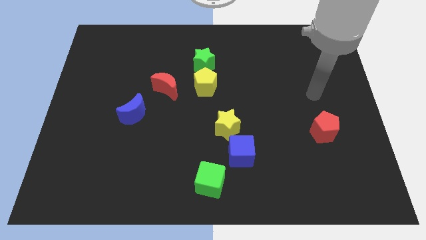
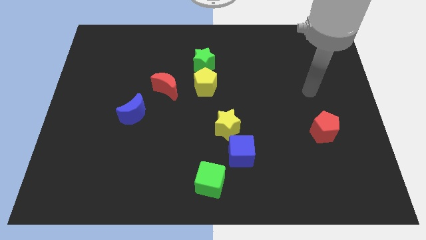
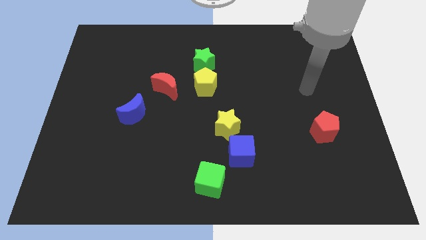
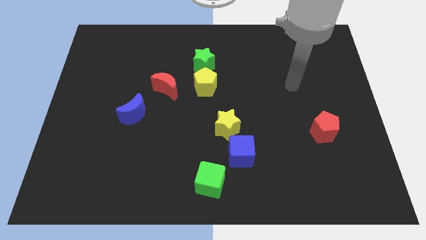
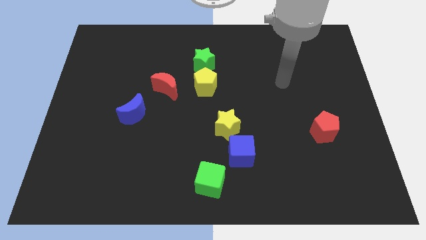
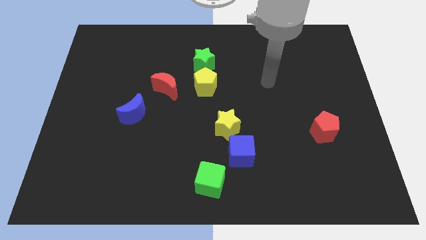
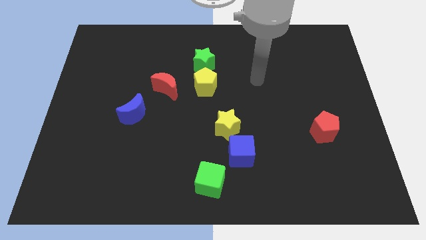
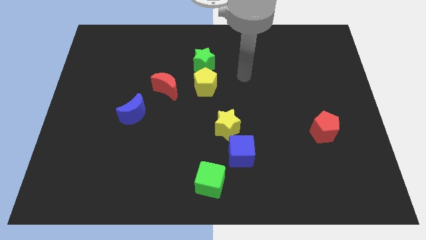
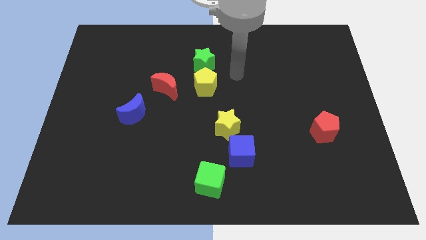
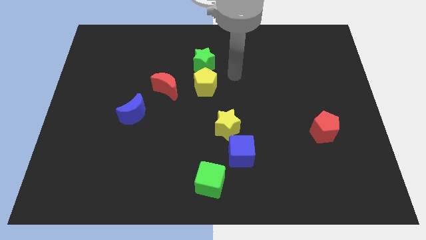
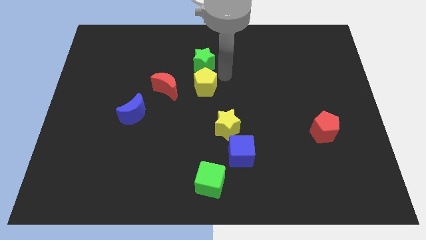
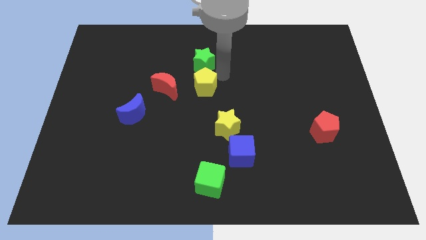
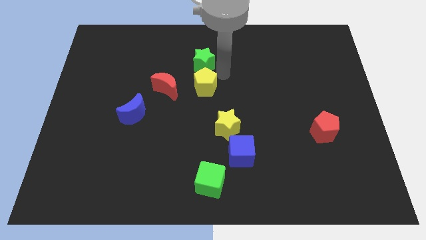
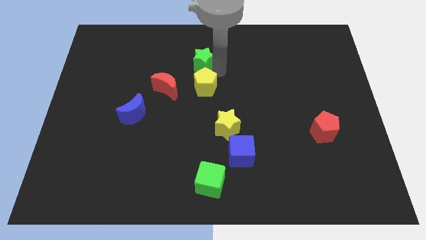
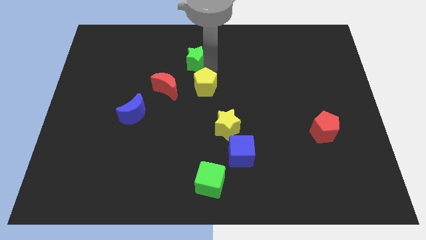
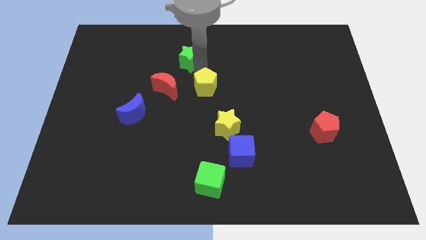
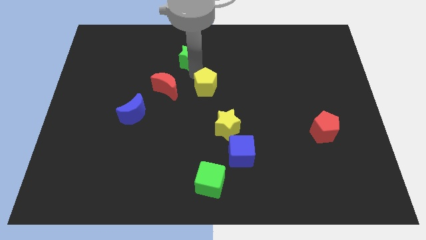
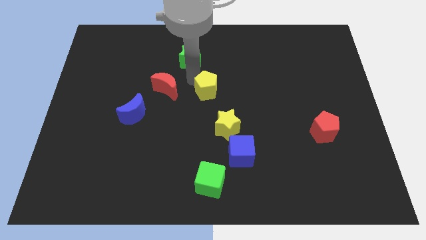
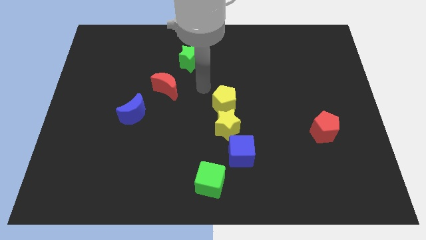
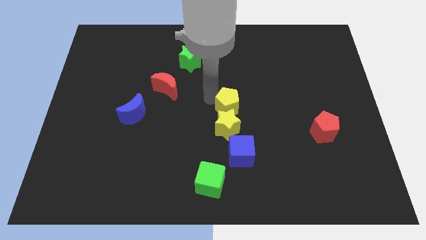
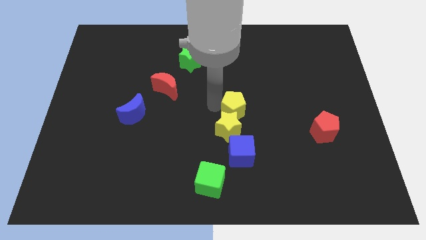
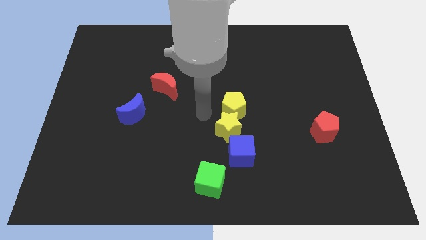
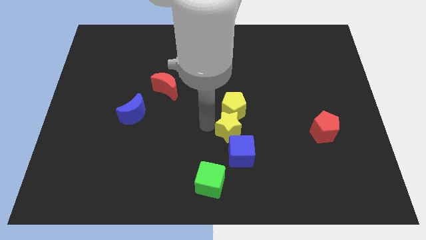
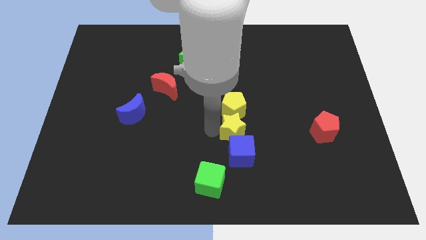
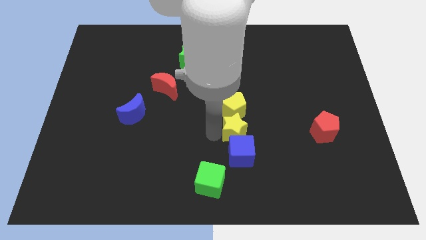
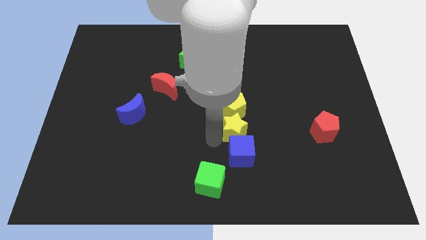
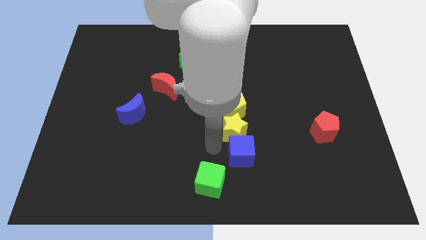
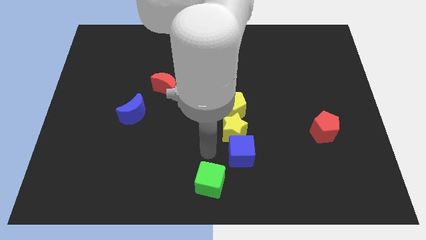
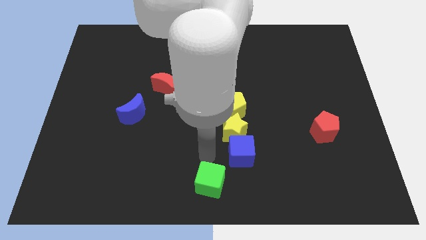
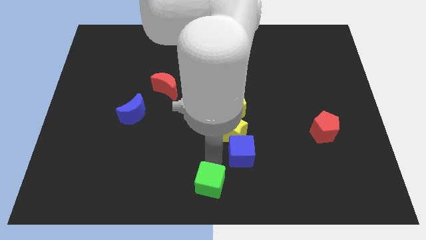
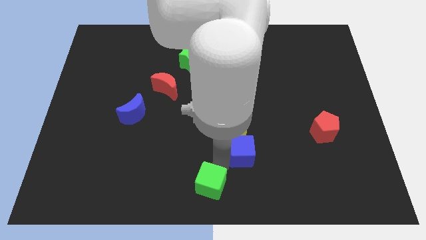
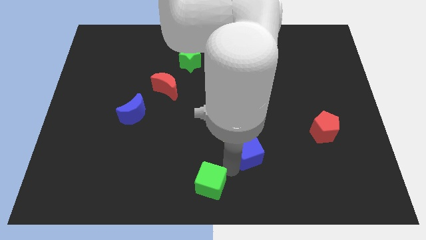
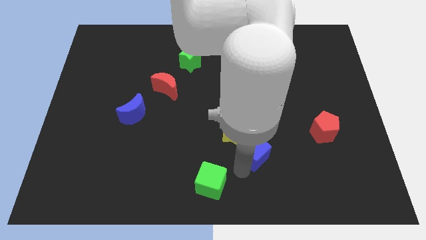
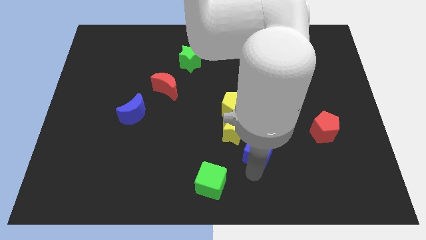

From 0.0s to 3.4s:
move the blue cube bottom left side of the yellow star

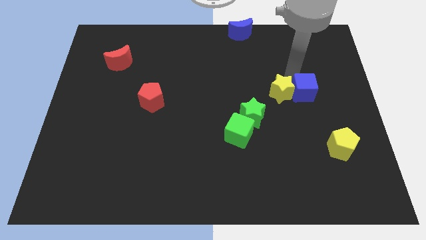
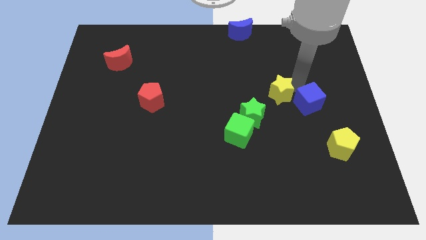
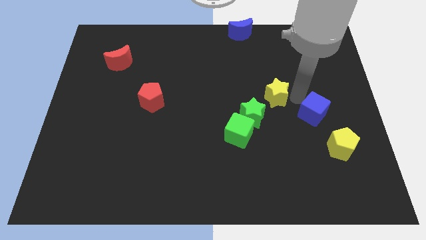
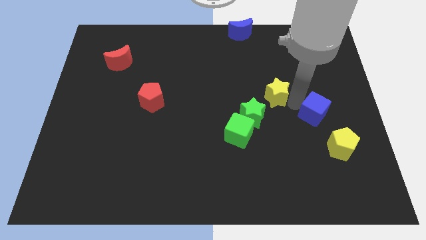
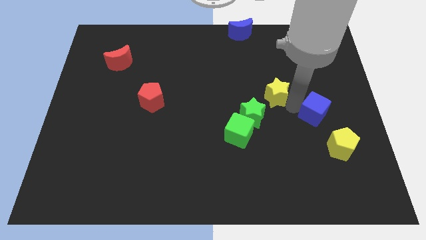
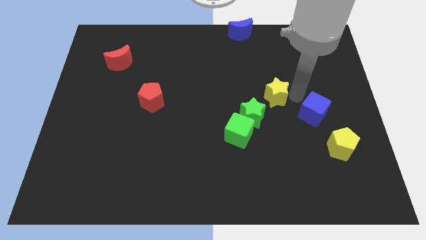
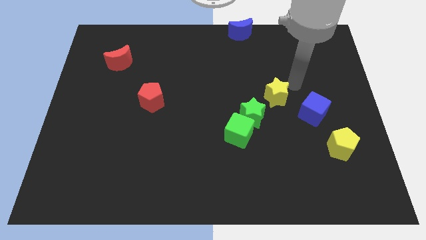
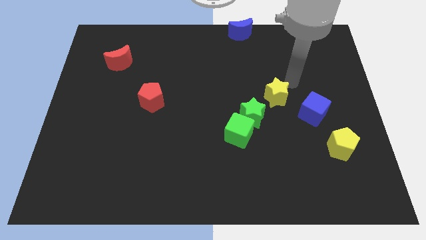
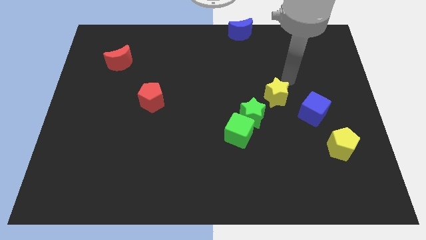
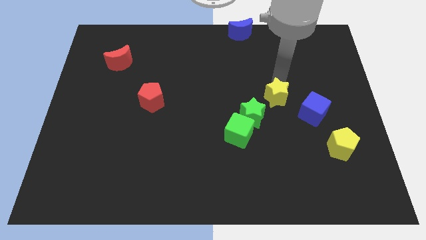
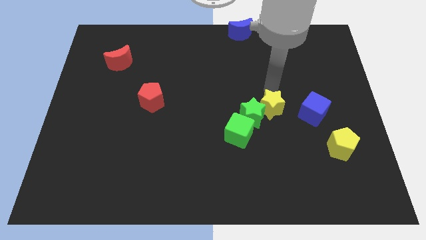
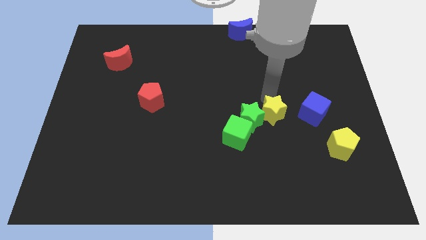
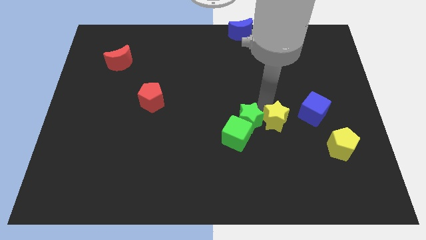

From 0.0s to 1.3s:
place the yellow star right to the green star

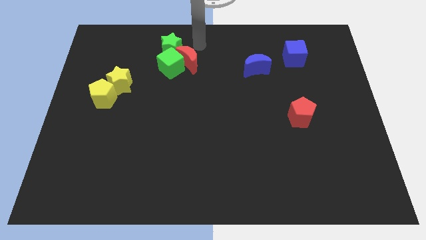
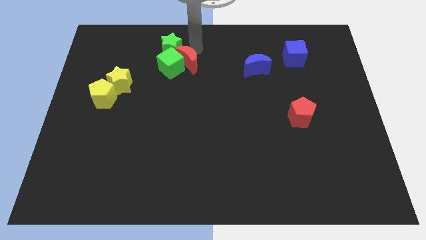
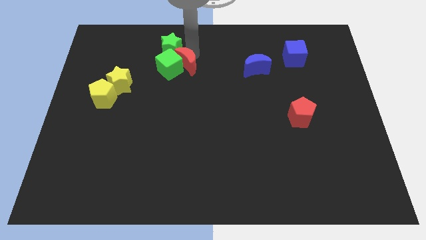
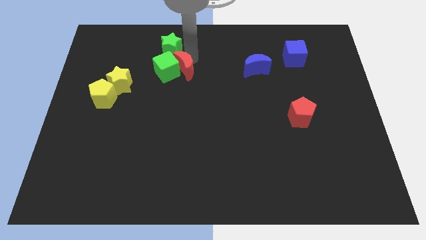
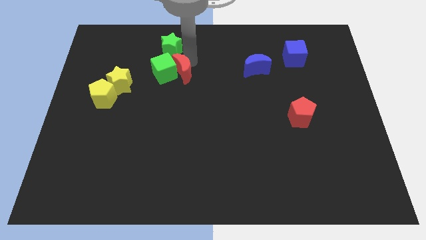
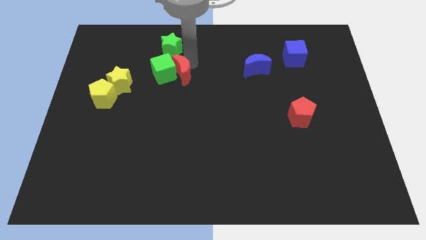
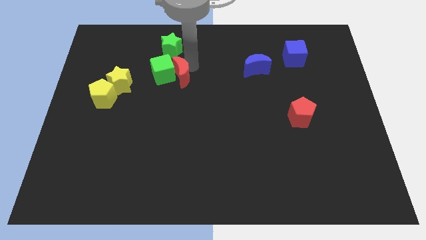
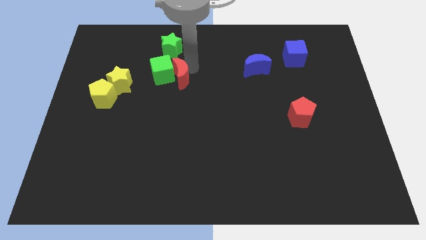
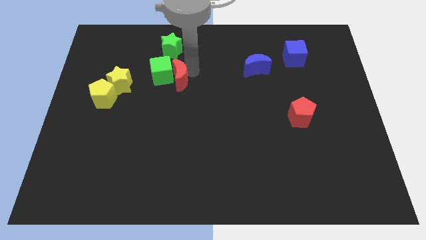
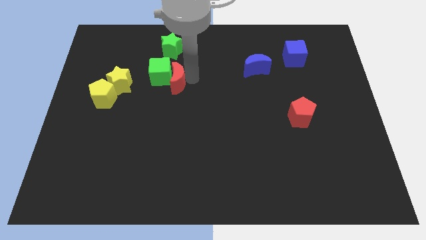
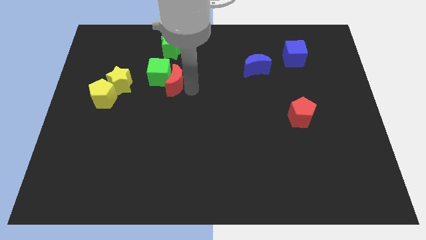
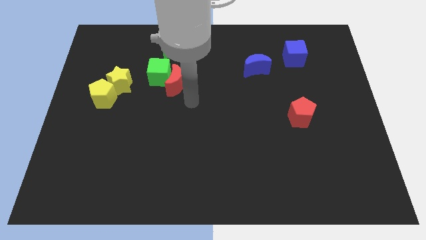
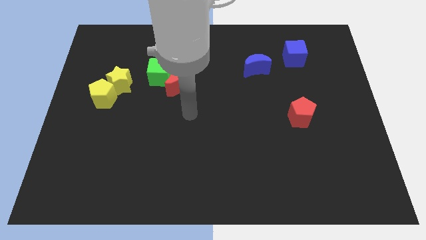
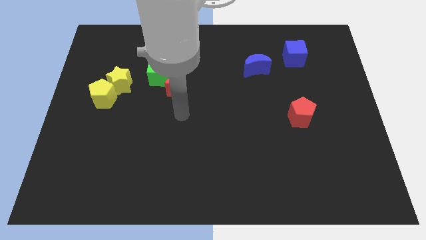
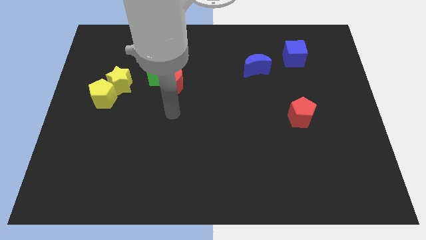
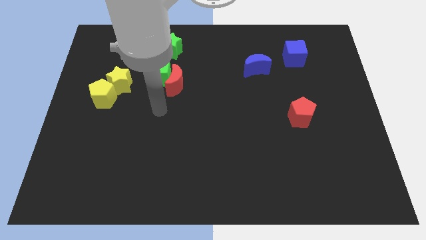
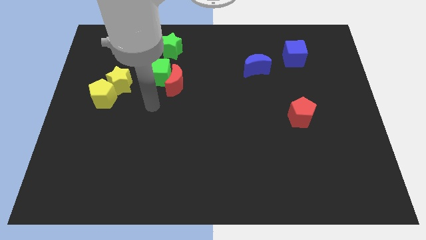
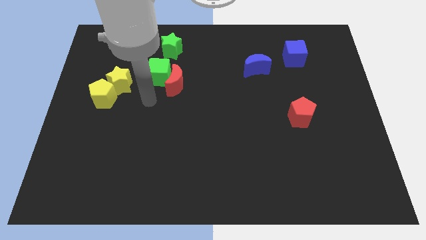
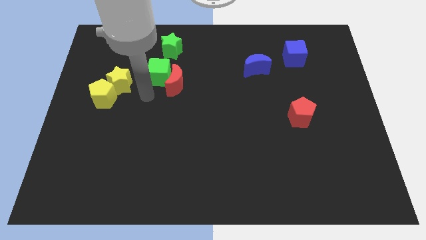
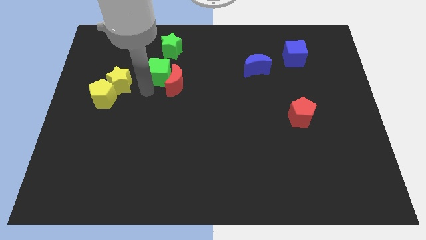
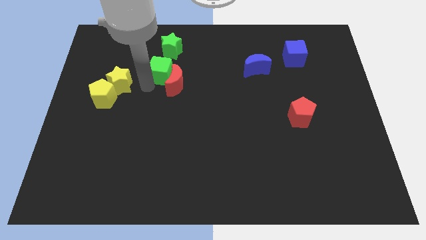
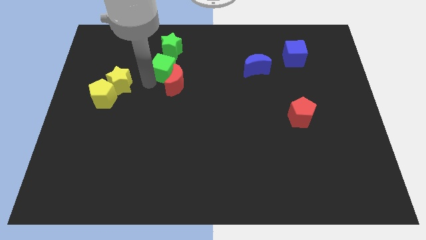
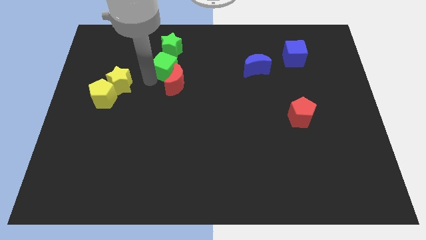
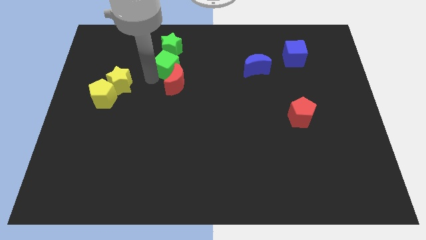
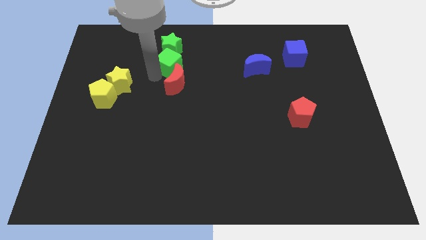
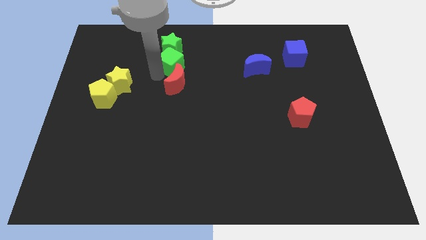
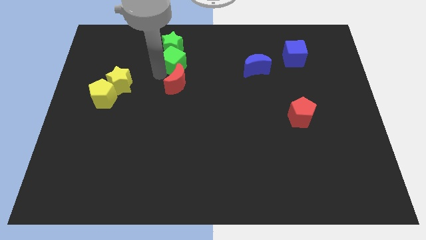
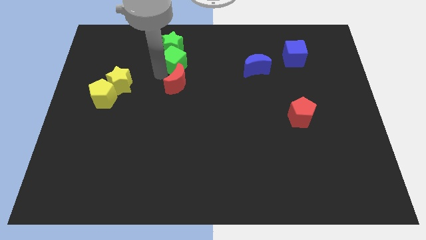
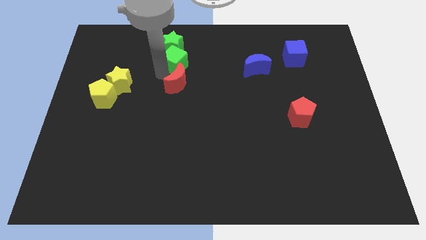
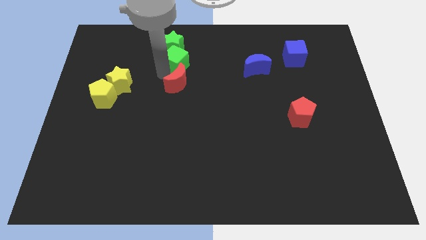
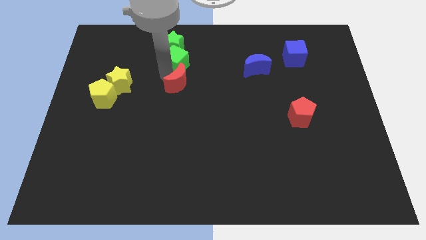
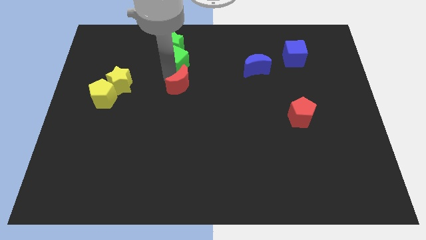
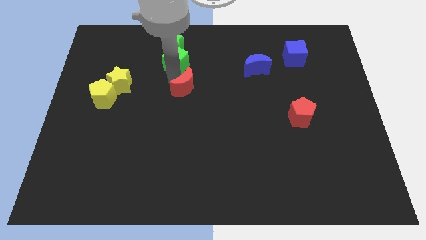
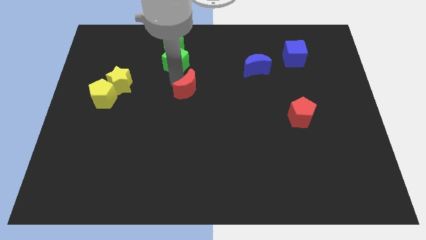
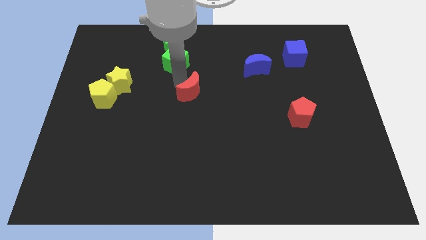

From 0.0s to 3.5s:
separate the red crescent from the green cube

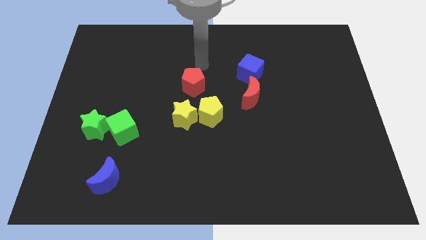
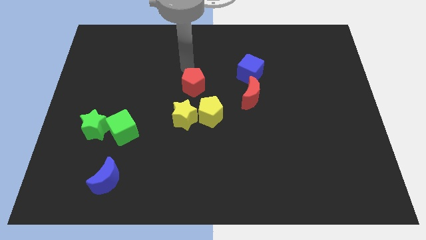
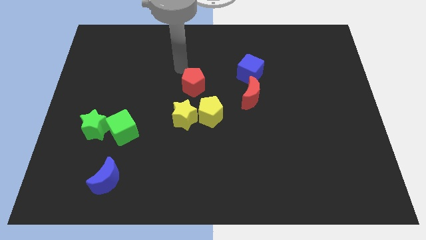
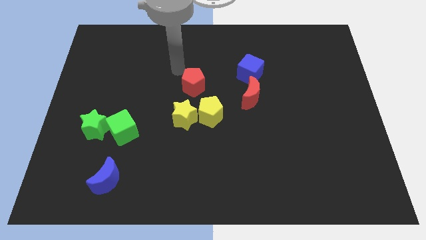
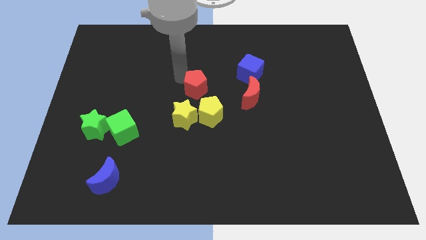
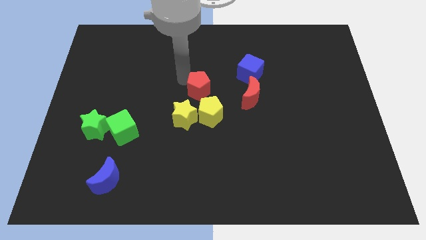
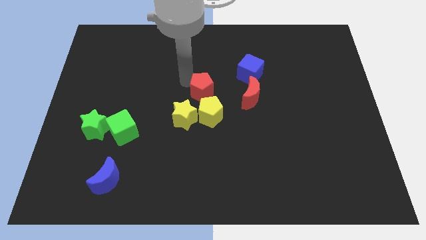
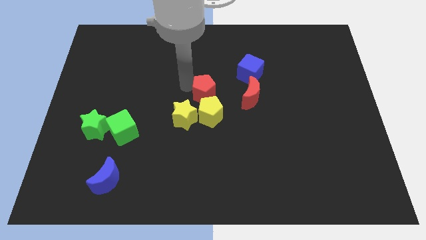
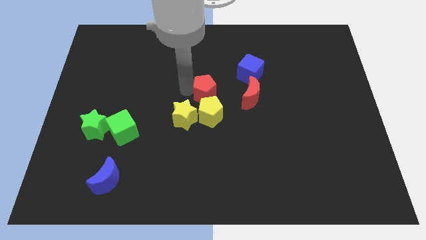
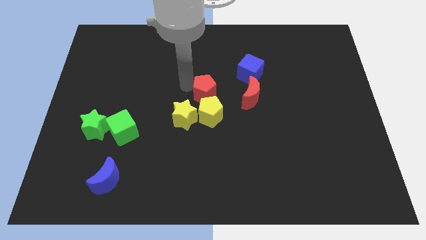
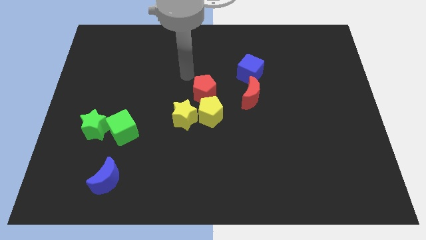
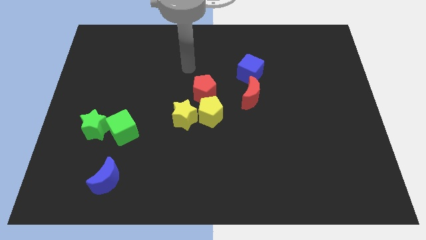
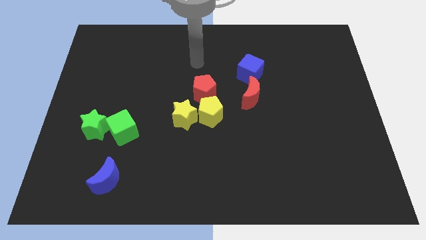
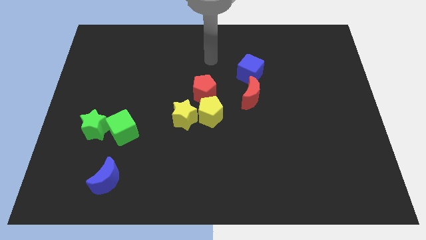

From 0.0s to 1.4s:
place the red pentagon towards the top left side of the yellow pentagon
